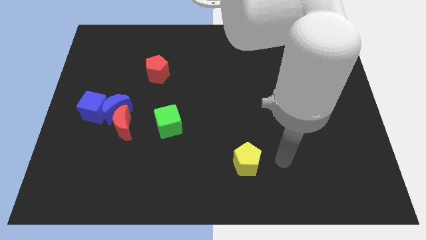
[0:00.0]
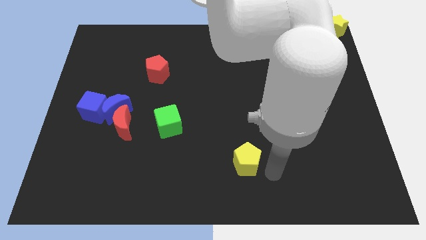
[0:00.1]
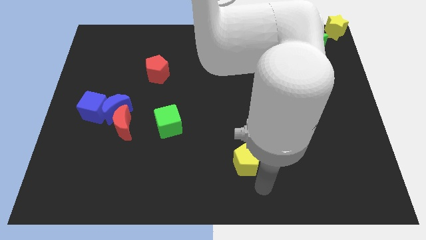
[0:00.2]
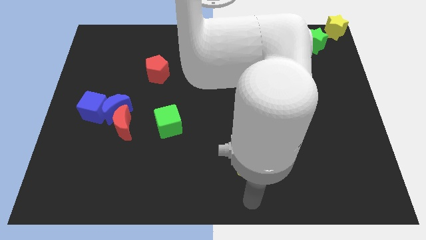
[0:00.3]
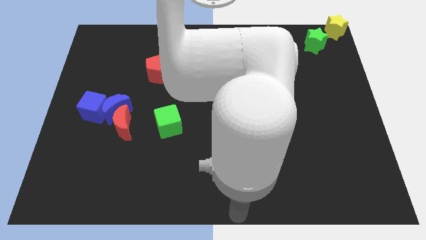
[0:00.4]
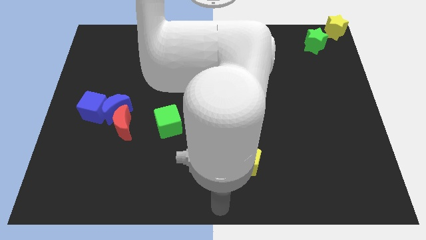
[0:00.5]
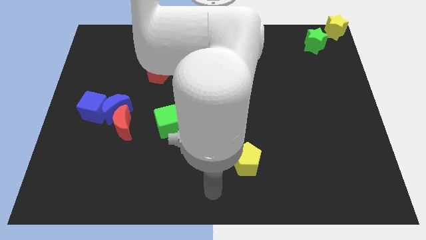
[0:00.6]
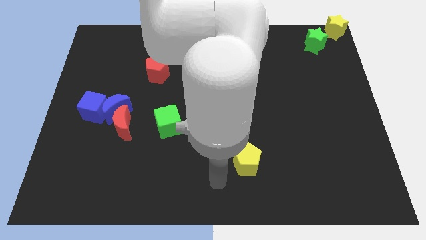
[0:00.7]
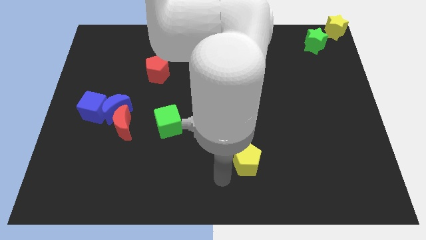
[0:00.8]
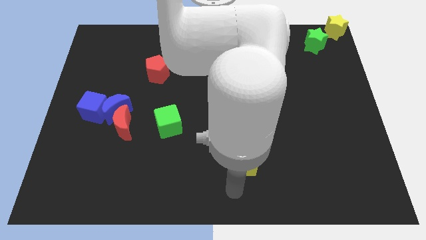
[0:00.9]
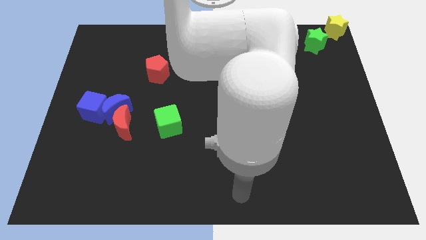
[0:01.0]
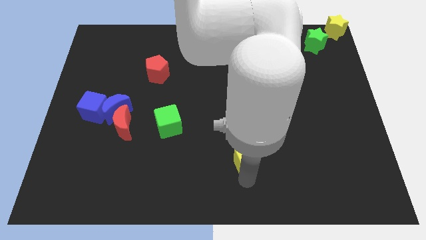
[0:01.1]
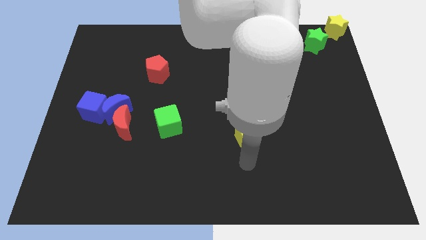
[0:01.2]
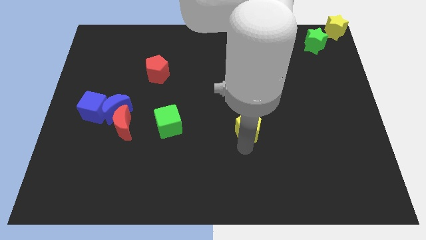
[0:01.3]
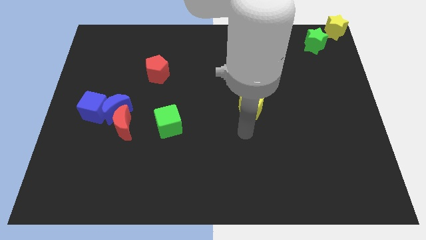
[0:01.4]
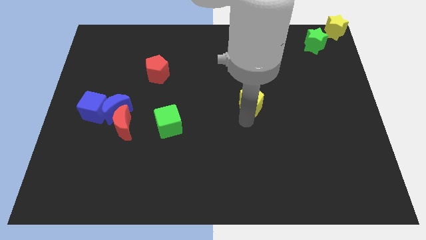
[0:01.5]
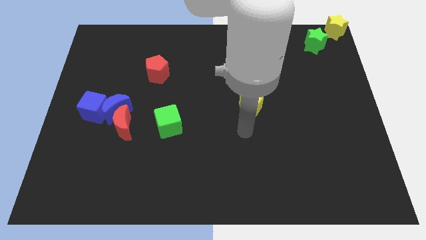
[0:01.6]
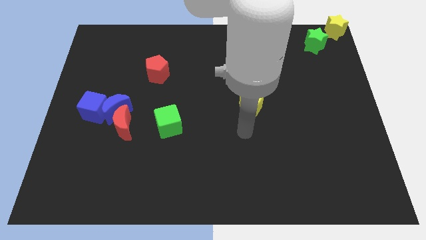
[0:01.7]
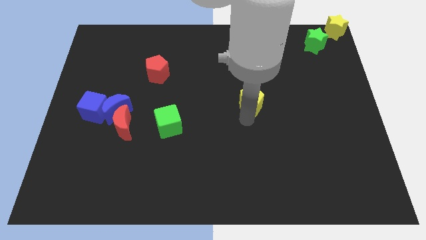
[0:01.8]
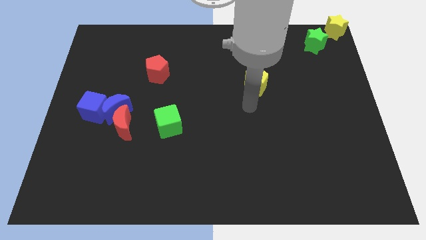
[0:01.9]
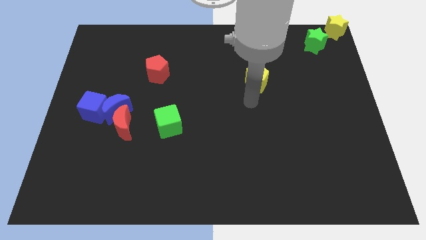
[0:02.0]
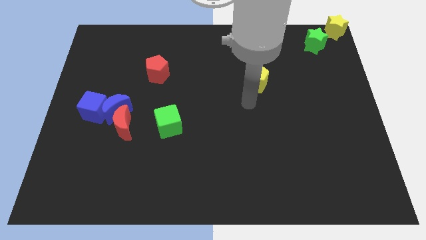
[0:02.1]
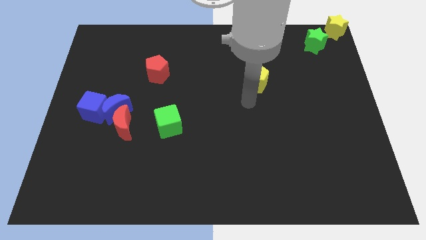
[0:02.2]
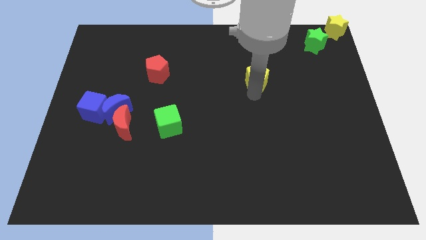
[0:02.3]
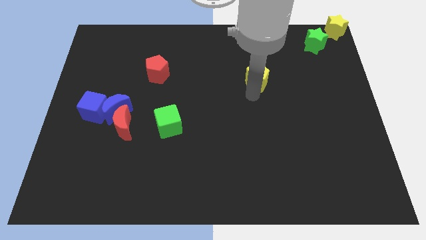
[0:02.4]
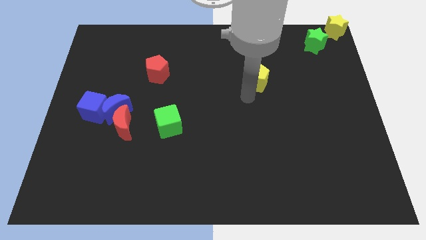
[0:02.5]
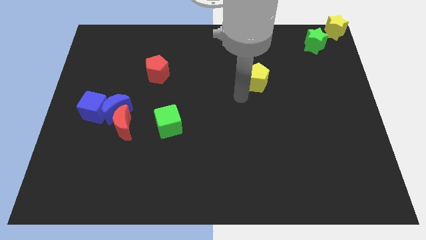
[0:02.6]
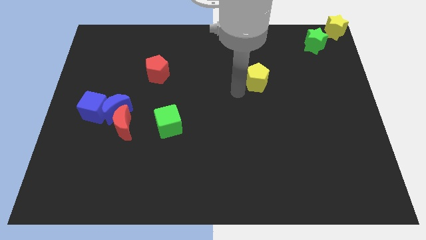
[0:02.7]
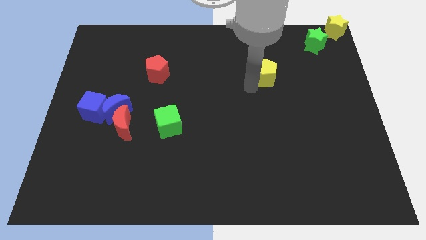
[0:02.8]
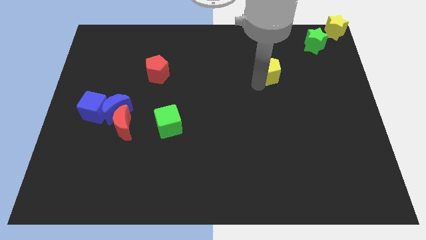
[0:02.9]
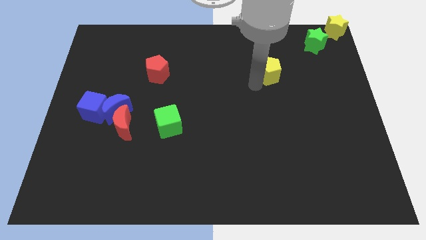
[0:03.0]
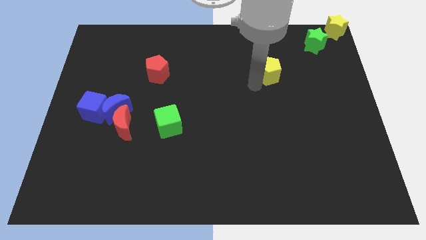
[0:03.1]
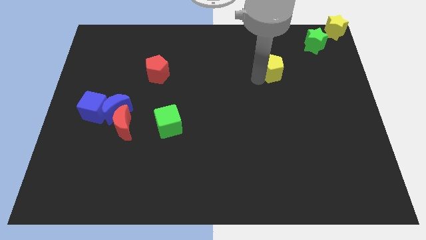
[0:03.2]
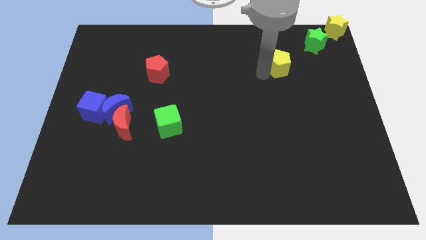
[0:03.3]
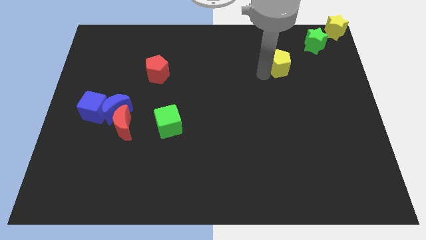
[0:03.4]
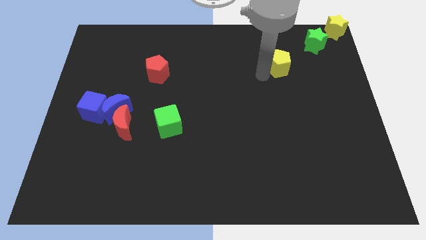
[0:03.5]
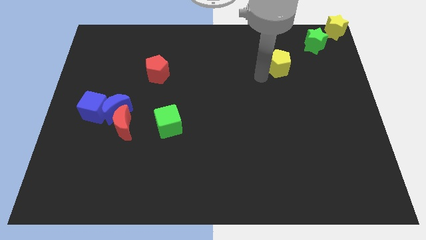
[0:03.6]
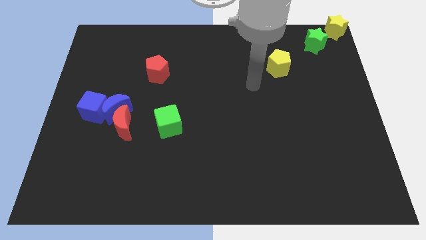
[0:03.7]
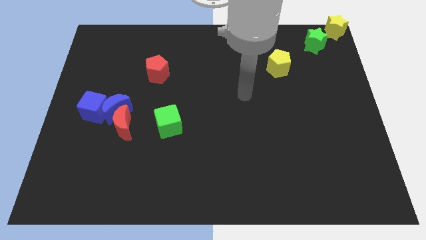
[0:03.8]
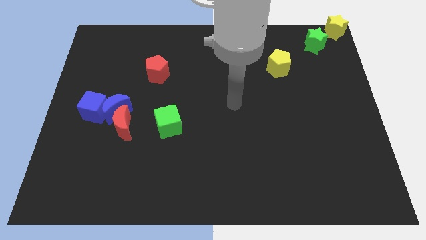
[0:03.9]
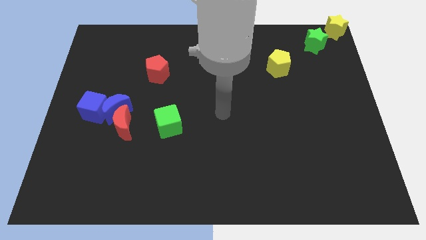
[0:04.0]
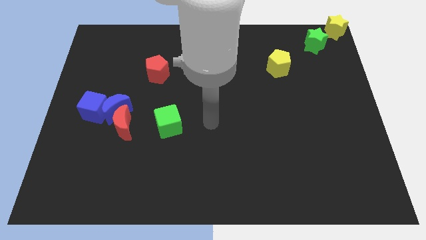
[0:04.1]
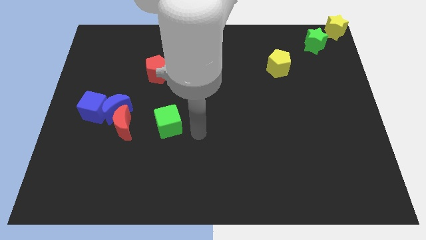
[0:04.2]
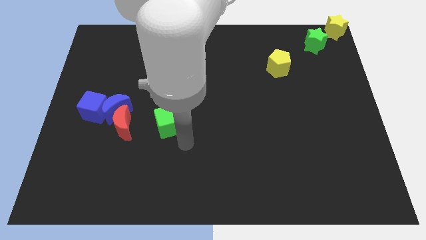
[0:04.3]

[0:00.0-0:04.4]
push the yellow pentagon towards the green star

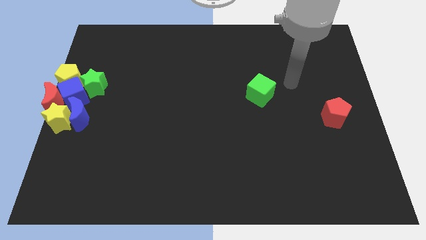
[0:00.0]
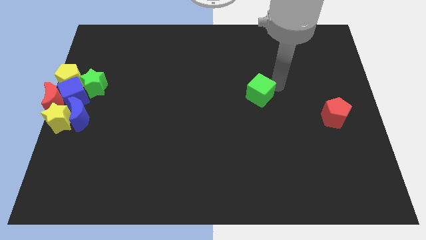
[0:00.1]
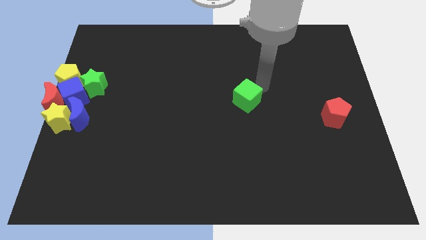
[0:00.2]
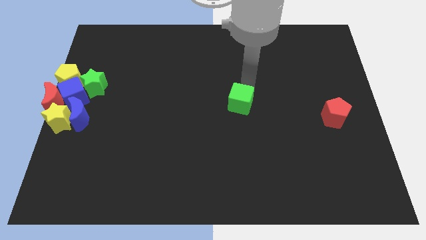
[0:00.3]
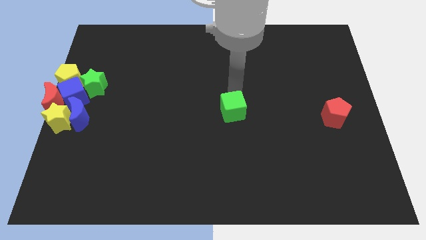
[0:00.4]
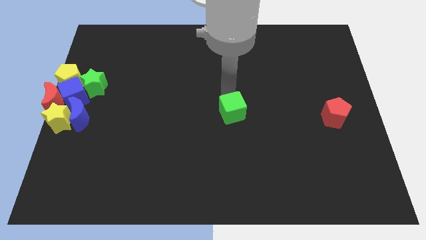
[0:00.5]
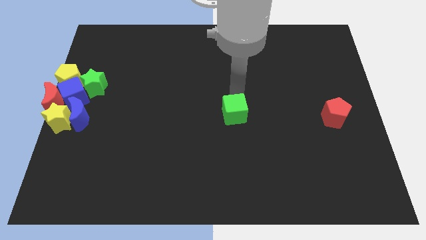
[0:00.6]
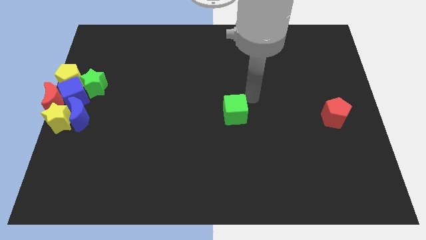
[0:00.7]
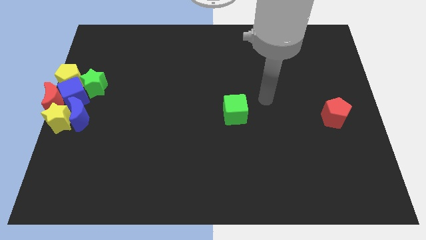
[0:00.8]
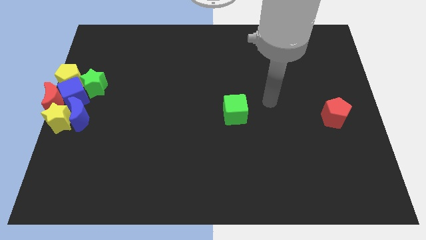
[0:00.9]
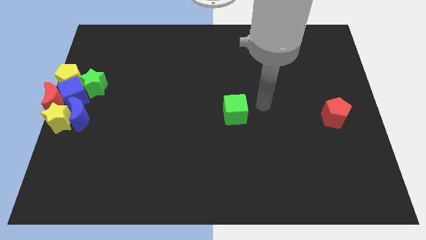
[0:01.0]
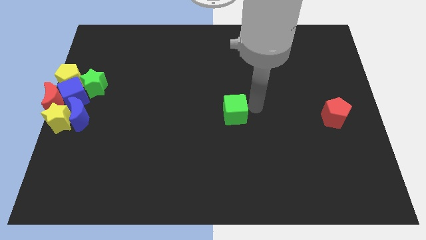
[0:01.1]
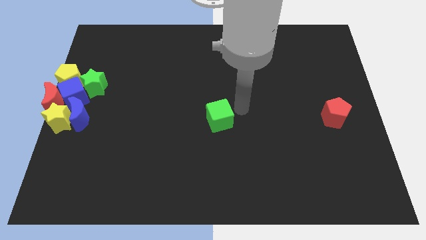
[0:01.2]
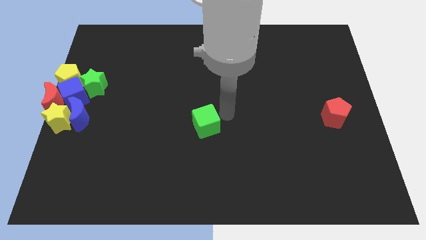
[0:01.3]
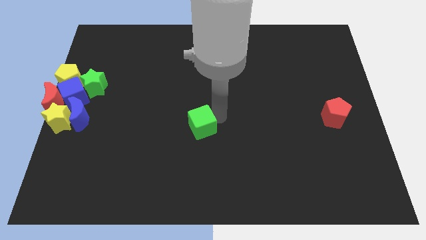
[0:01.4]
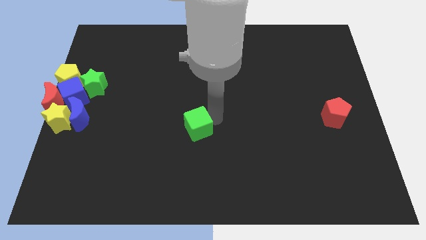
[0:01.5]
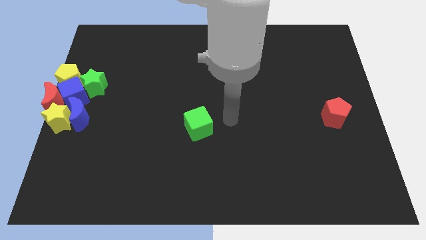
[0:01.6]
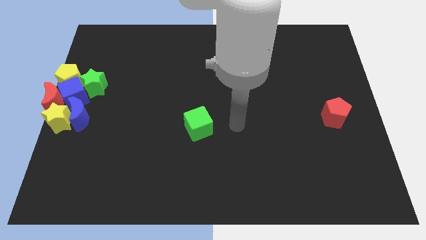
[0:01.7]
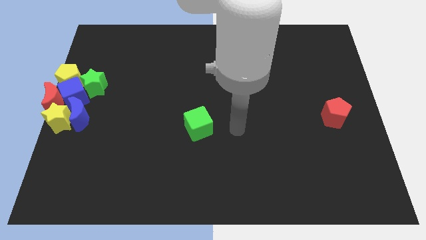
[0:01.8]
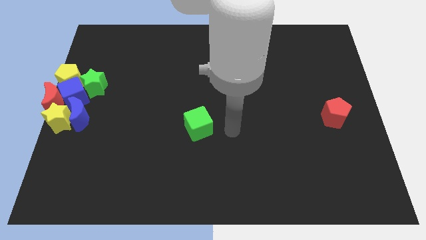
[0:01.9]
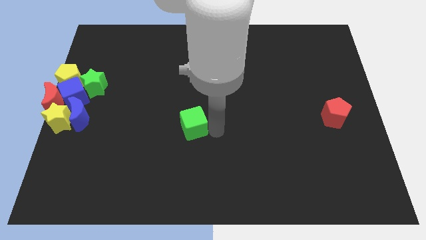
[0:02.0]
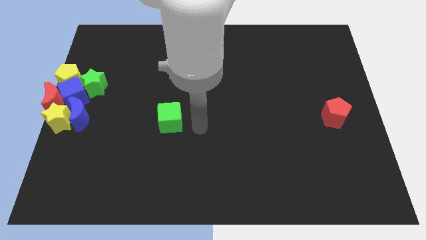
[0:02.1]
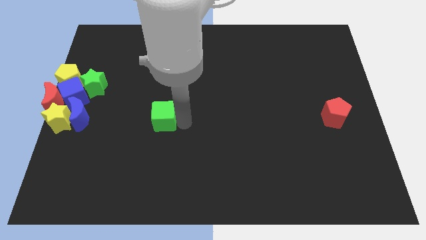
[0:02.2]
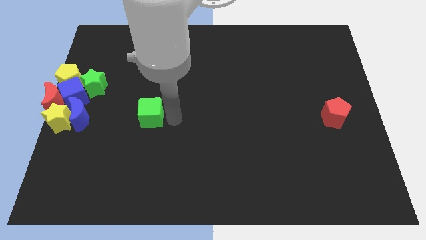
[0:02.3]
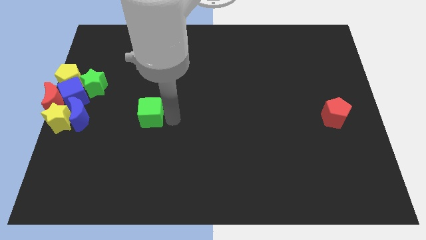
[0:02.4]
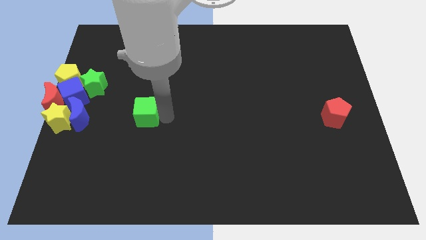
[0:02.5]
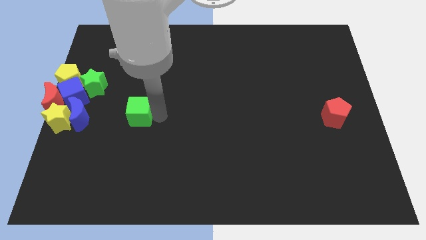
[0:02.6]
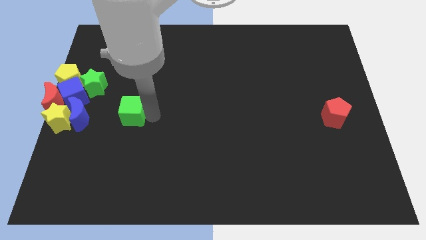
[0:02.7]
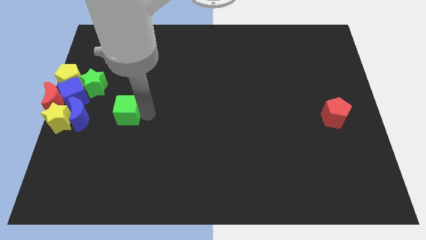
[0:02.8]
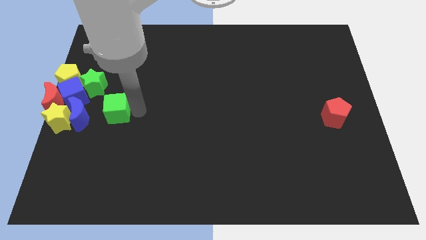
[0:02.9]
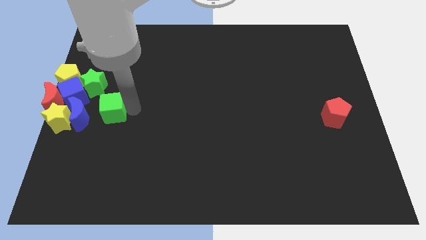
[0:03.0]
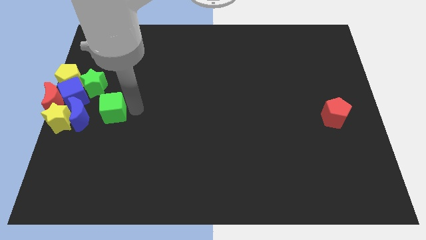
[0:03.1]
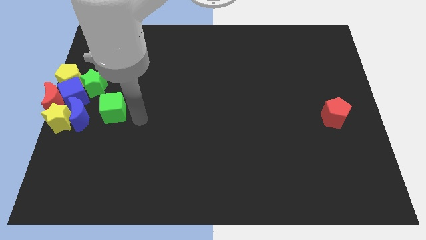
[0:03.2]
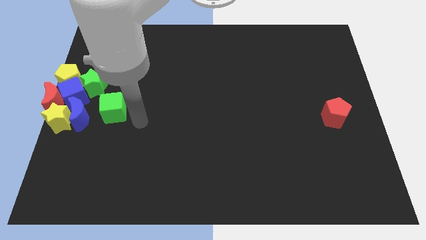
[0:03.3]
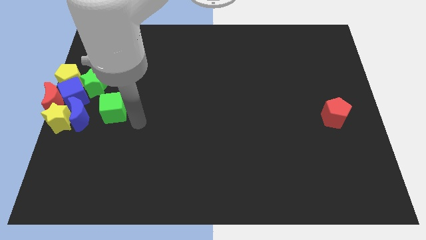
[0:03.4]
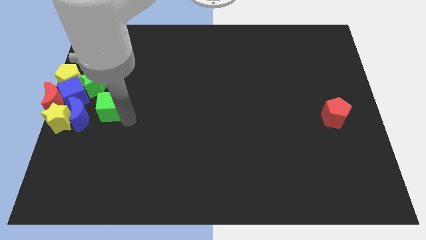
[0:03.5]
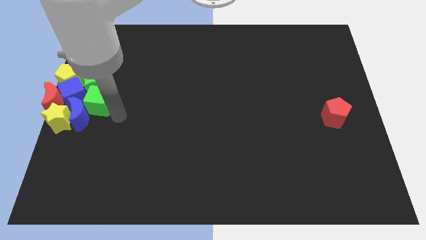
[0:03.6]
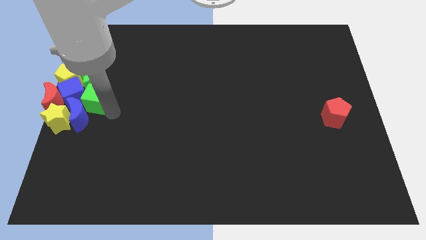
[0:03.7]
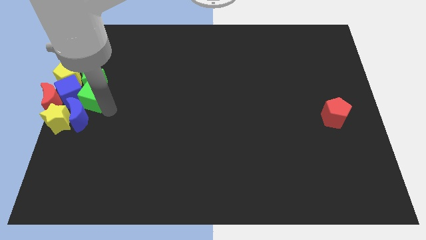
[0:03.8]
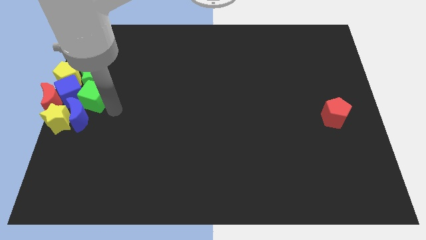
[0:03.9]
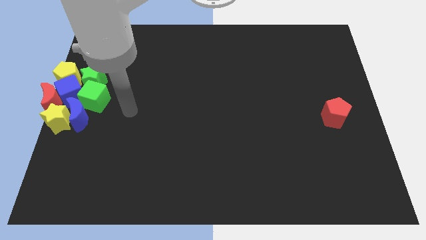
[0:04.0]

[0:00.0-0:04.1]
move the green cube into the group of the blocks

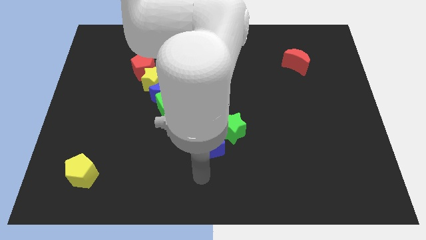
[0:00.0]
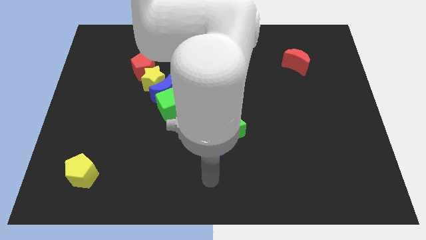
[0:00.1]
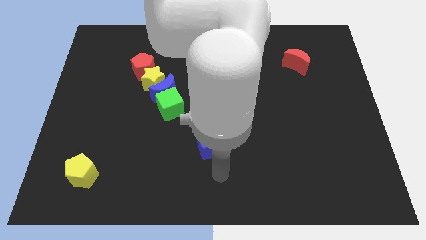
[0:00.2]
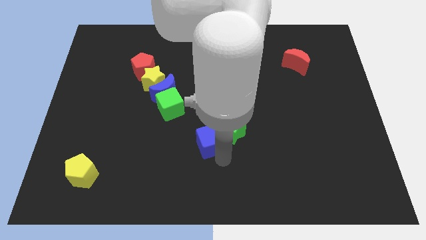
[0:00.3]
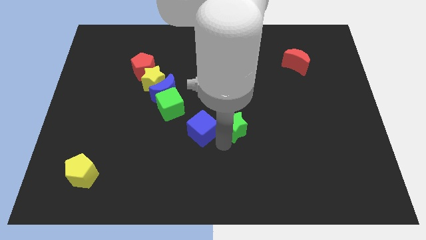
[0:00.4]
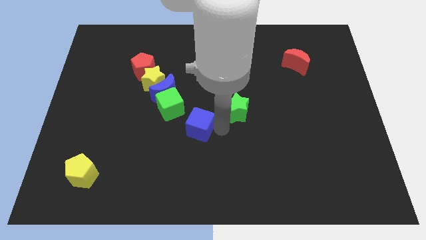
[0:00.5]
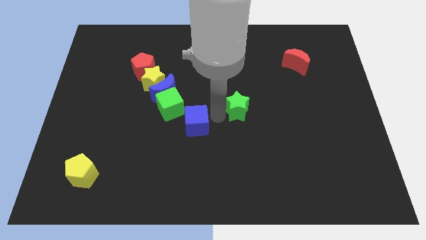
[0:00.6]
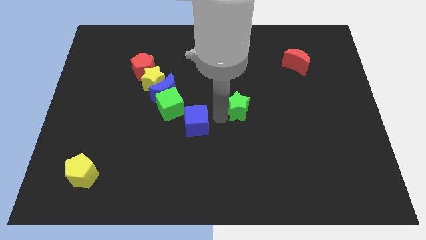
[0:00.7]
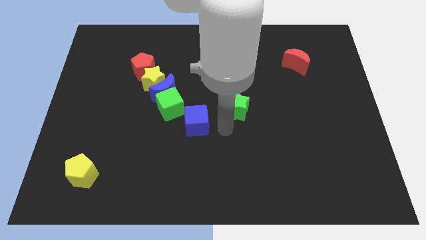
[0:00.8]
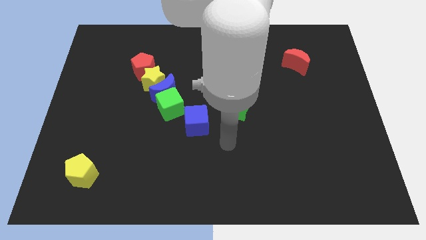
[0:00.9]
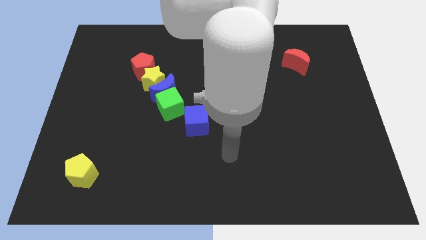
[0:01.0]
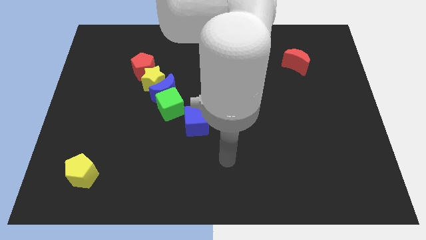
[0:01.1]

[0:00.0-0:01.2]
separate the blue cube and green star
